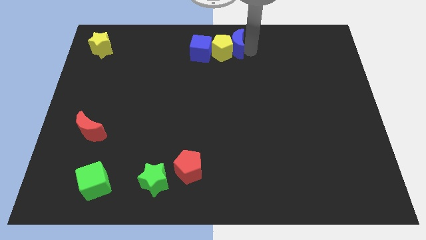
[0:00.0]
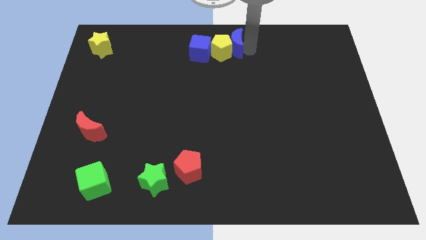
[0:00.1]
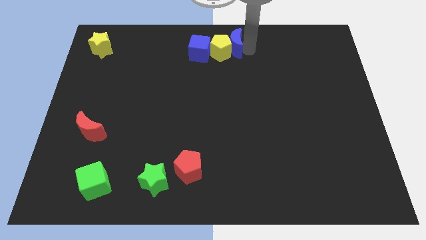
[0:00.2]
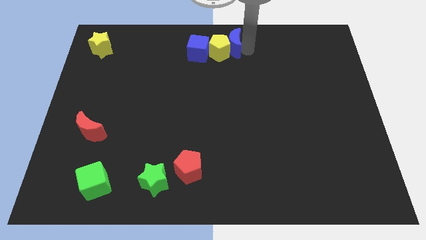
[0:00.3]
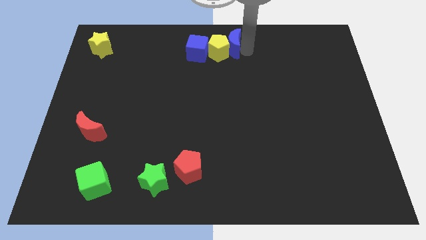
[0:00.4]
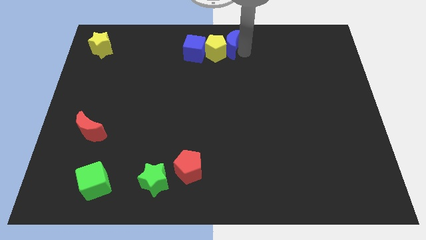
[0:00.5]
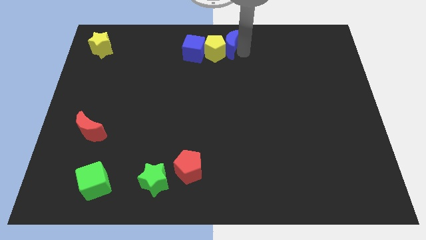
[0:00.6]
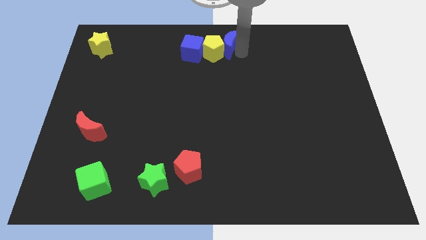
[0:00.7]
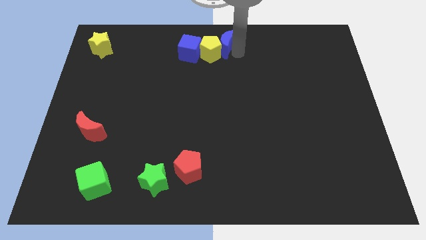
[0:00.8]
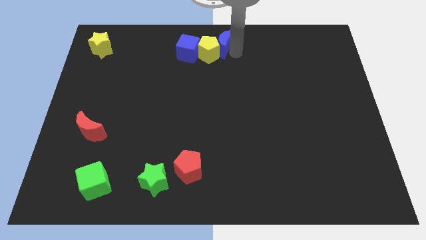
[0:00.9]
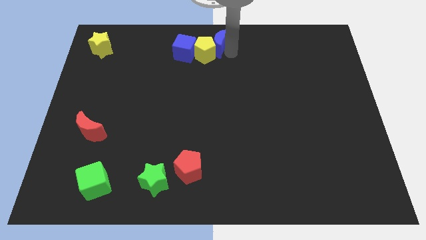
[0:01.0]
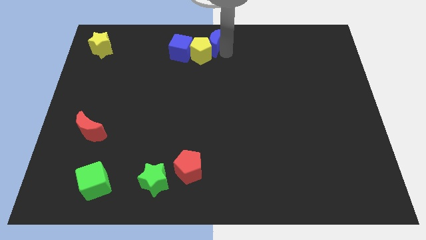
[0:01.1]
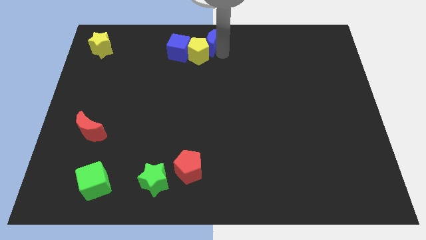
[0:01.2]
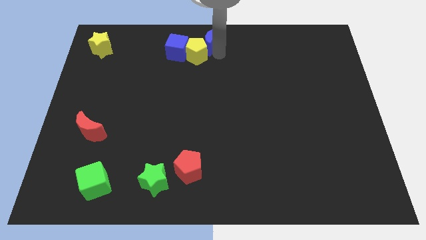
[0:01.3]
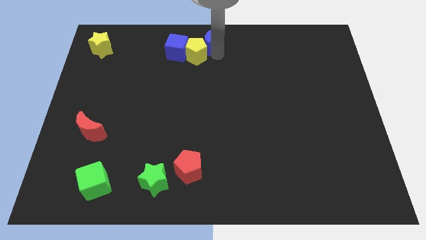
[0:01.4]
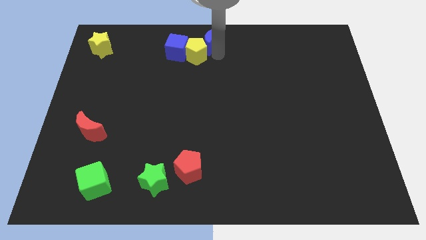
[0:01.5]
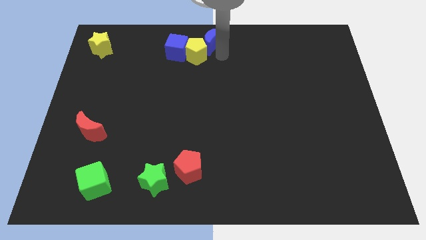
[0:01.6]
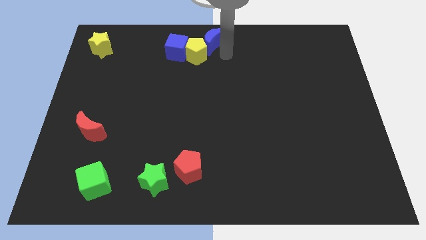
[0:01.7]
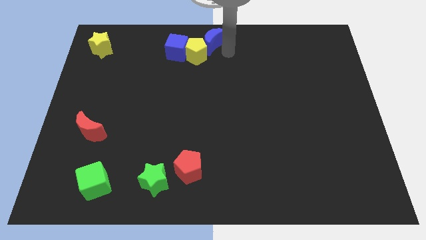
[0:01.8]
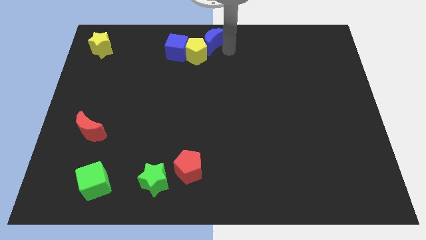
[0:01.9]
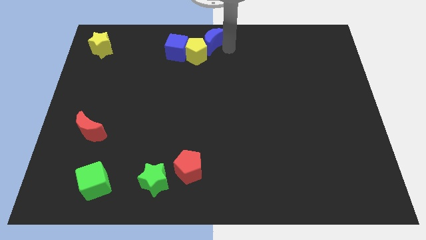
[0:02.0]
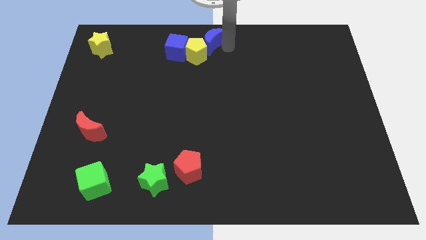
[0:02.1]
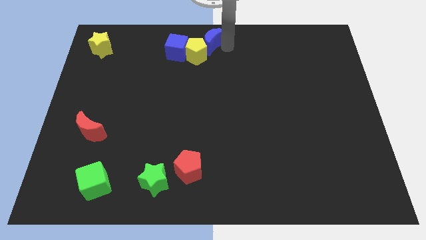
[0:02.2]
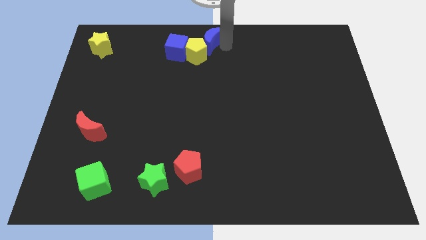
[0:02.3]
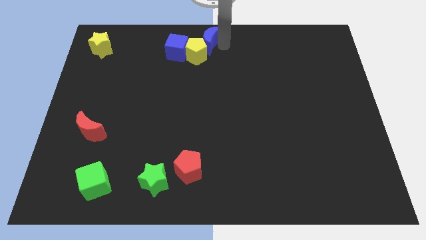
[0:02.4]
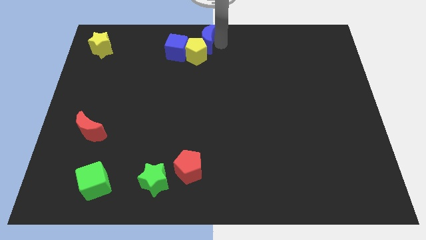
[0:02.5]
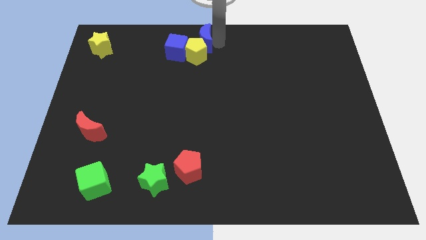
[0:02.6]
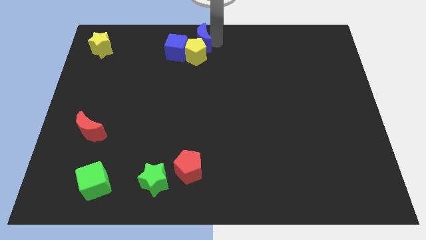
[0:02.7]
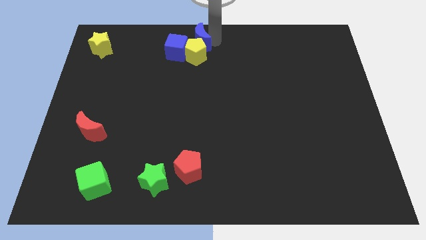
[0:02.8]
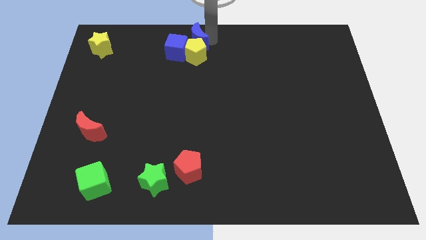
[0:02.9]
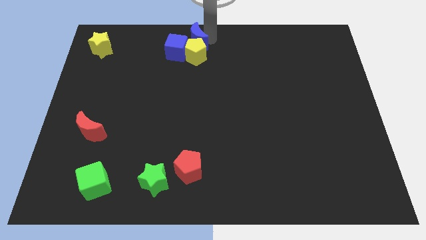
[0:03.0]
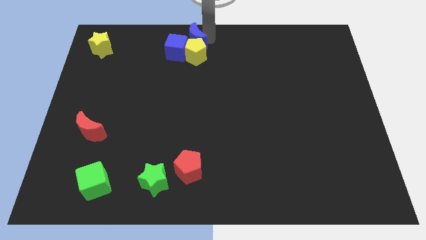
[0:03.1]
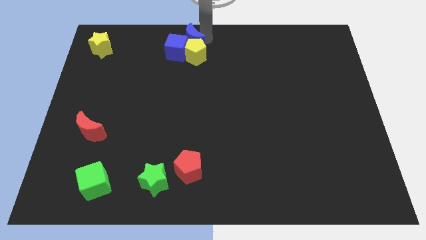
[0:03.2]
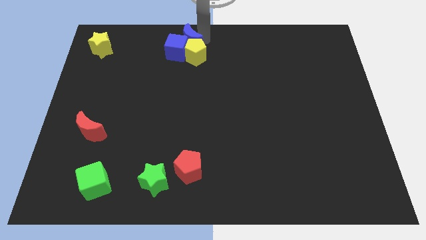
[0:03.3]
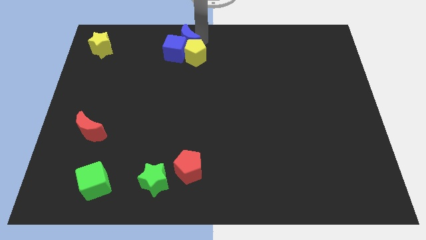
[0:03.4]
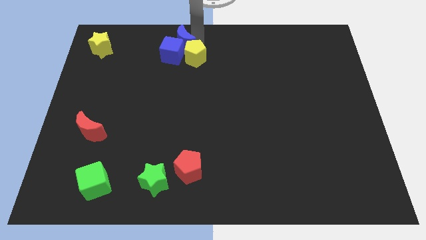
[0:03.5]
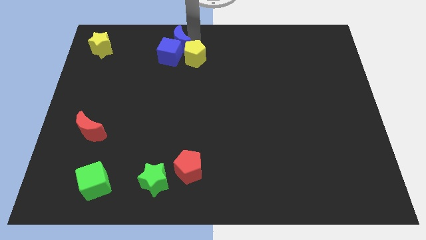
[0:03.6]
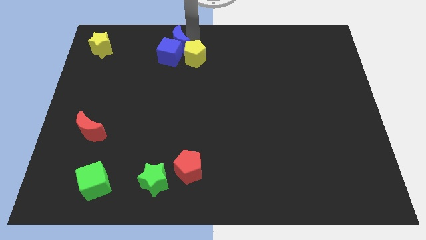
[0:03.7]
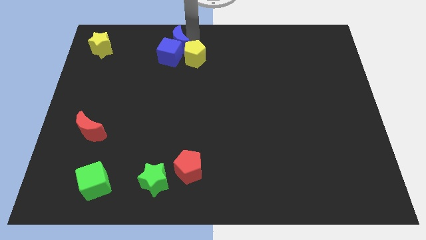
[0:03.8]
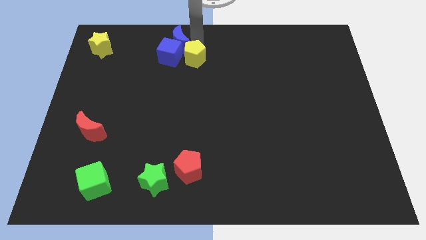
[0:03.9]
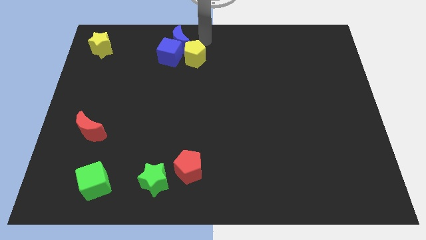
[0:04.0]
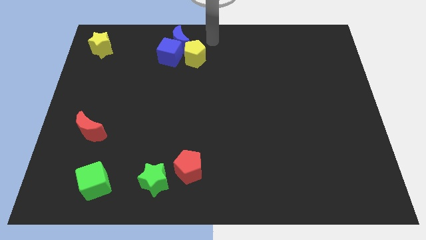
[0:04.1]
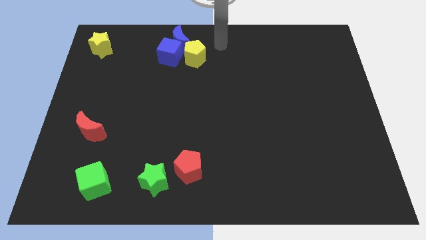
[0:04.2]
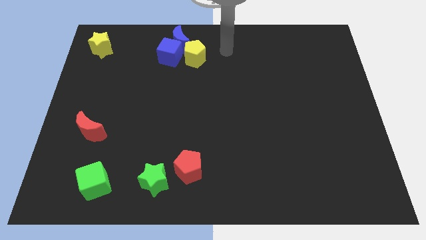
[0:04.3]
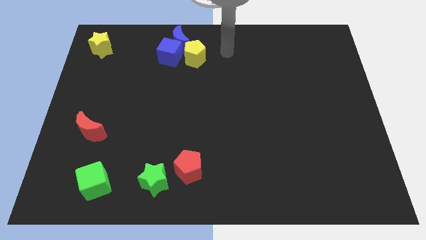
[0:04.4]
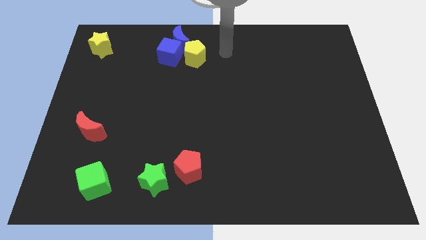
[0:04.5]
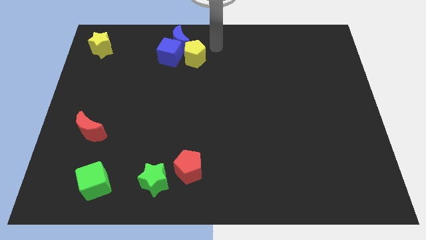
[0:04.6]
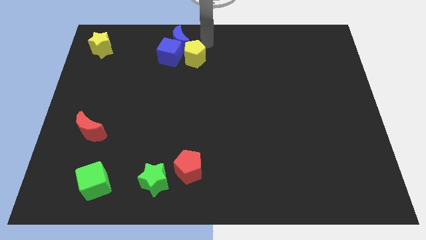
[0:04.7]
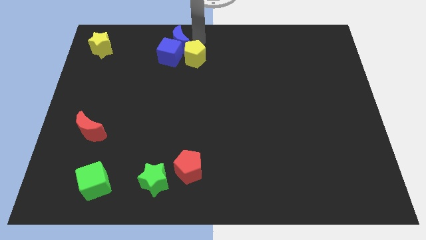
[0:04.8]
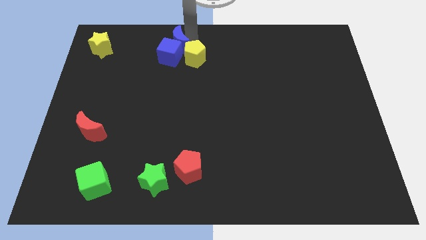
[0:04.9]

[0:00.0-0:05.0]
push the blue blocks and yellow pentagon slightly to the left

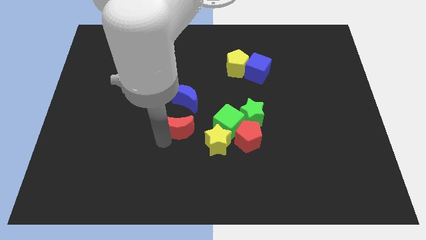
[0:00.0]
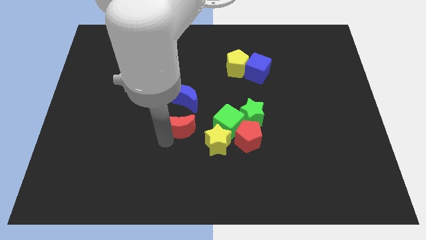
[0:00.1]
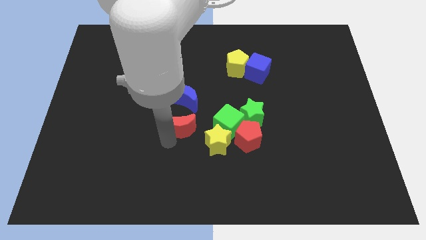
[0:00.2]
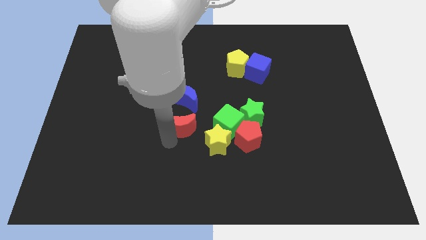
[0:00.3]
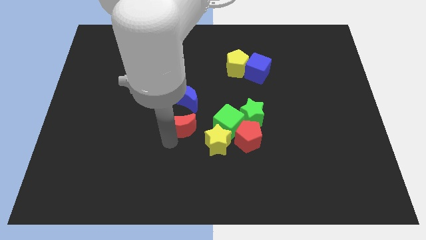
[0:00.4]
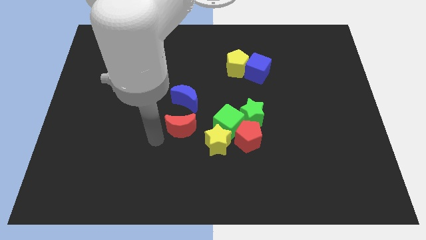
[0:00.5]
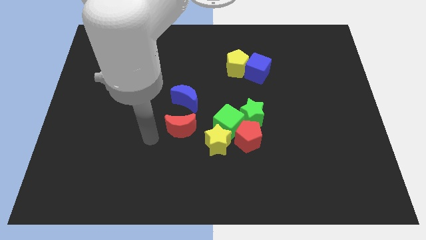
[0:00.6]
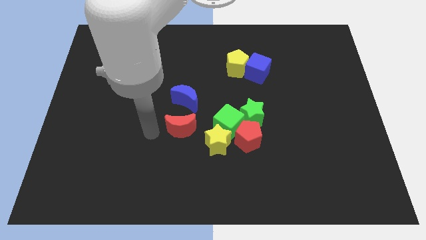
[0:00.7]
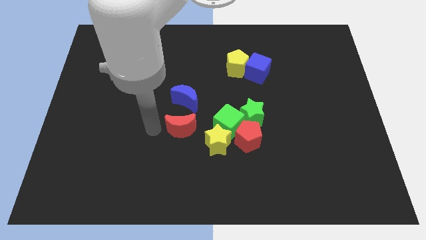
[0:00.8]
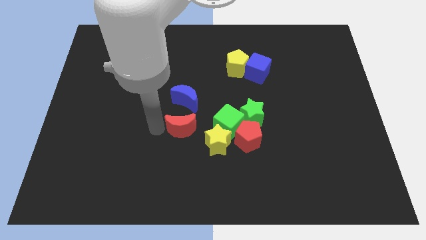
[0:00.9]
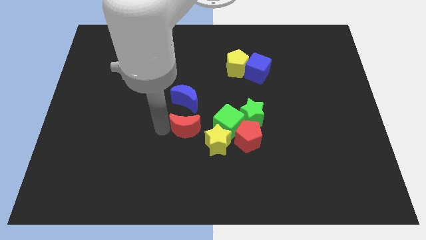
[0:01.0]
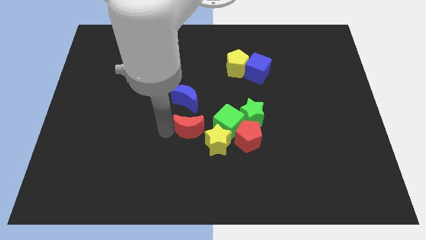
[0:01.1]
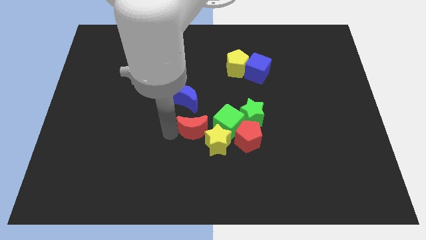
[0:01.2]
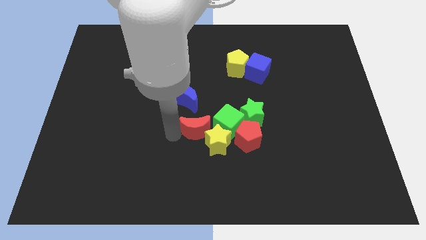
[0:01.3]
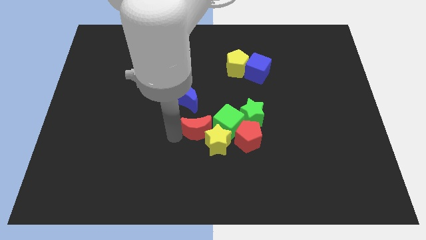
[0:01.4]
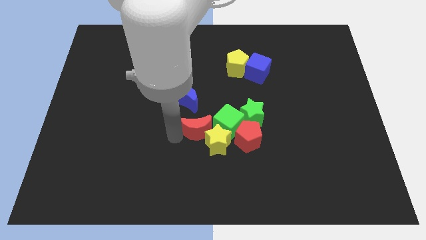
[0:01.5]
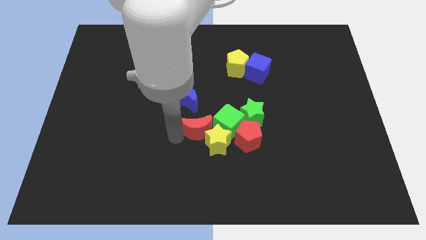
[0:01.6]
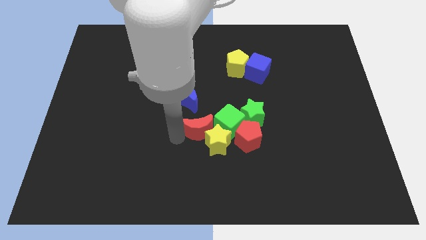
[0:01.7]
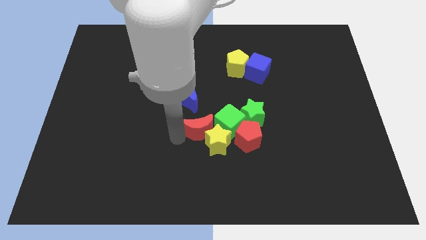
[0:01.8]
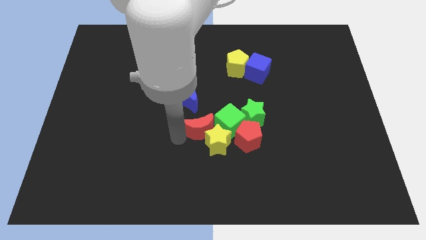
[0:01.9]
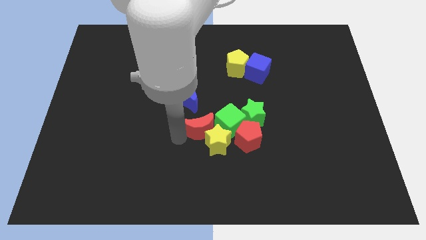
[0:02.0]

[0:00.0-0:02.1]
move the red crescent into the left of the green cube

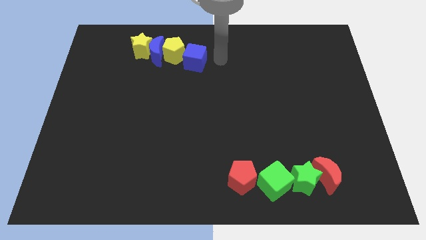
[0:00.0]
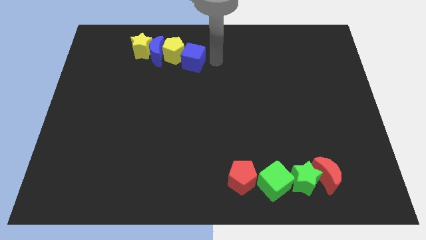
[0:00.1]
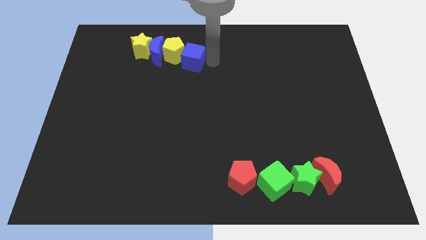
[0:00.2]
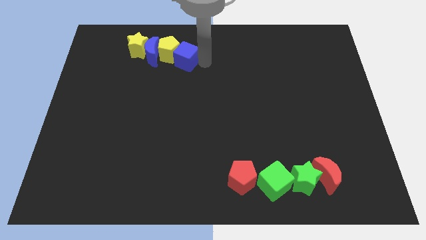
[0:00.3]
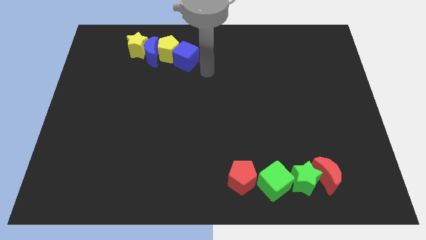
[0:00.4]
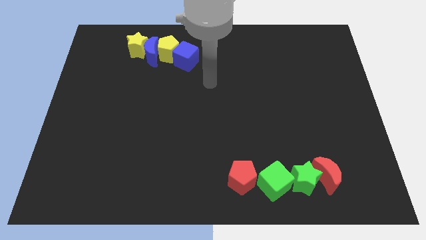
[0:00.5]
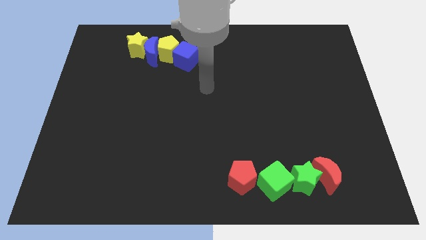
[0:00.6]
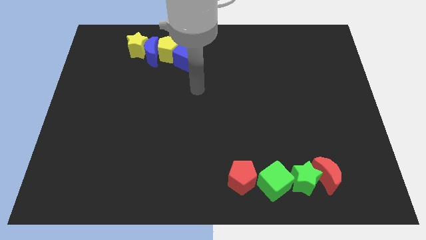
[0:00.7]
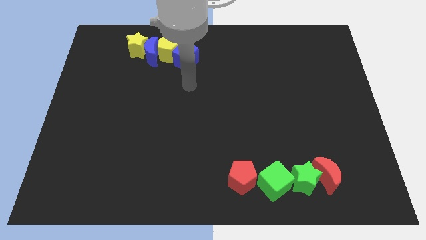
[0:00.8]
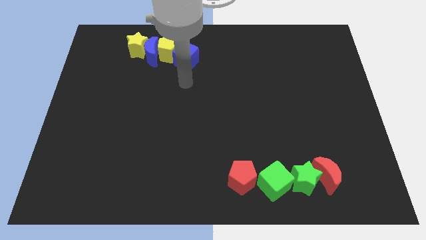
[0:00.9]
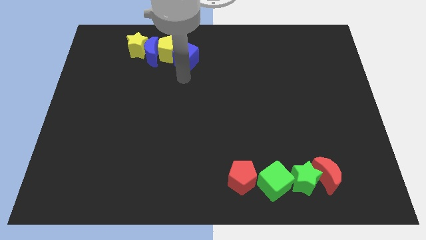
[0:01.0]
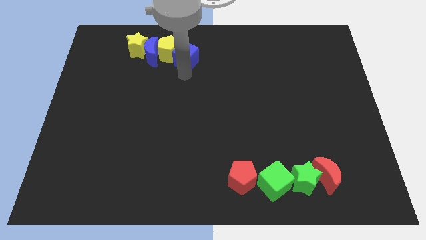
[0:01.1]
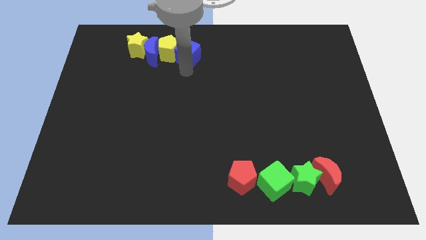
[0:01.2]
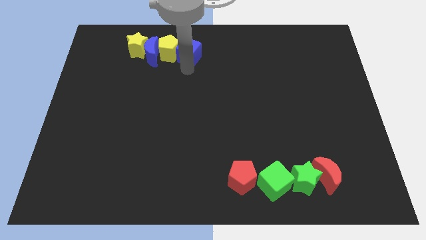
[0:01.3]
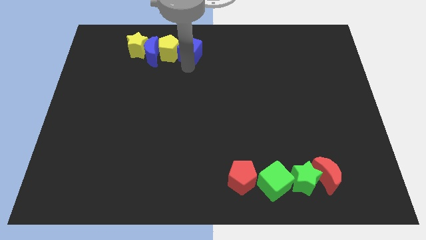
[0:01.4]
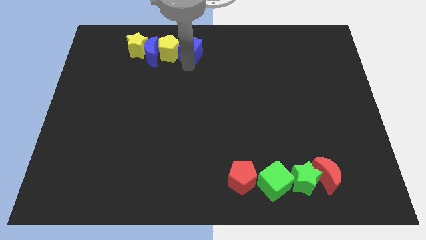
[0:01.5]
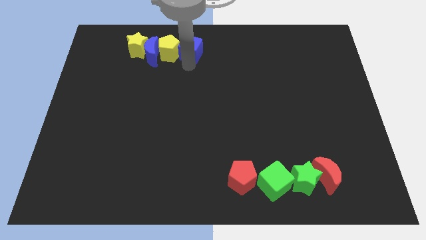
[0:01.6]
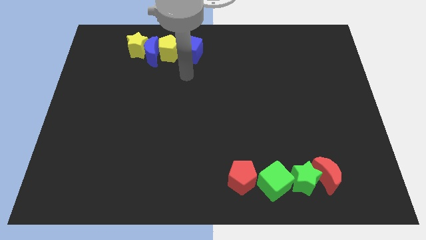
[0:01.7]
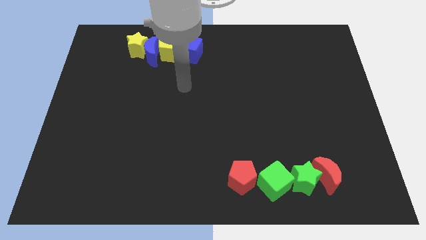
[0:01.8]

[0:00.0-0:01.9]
adjust the blue cube to the right of the yellow pentagon
